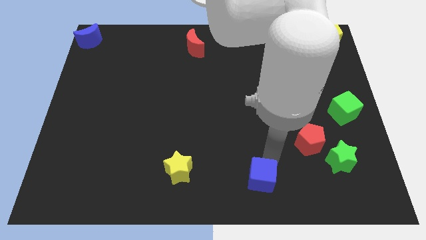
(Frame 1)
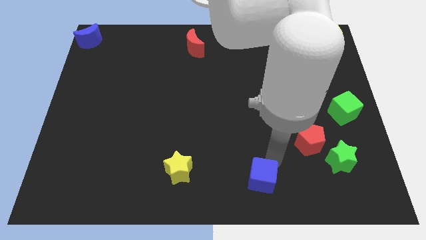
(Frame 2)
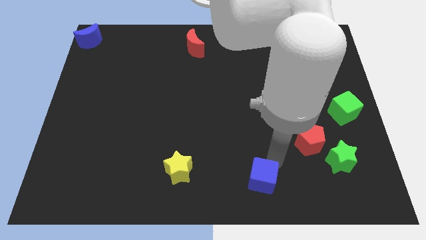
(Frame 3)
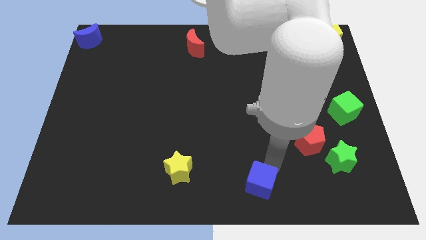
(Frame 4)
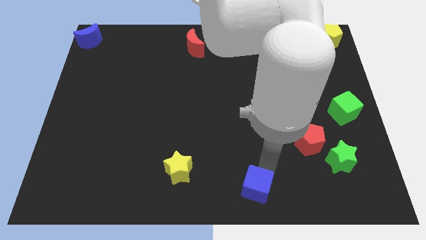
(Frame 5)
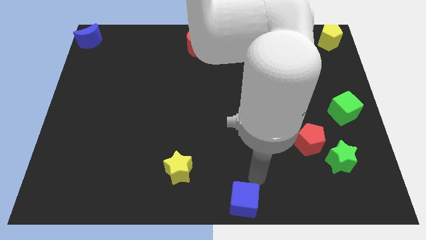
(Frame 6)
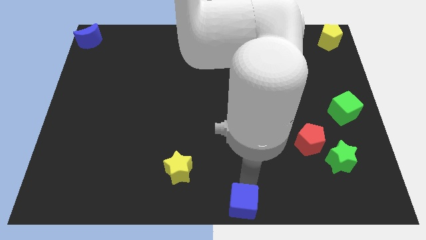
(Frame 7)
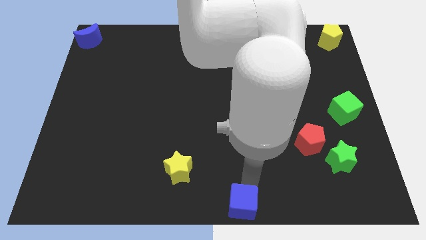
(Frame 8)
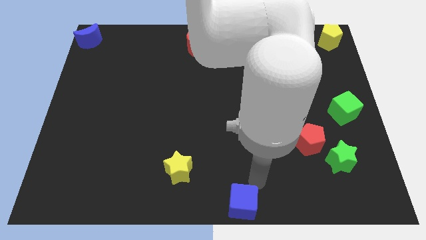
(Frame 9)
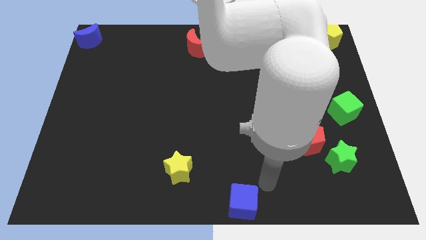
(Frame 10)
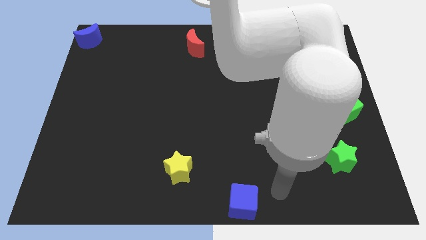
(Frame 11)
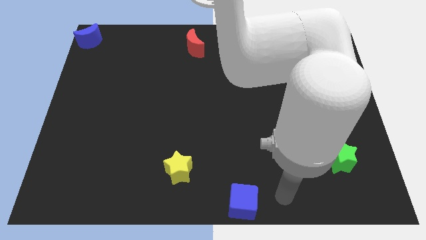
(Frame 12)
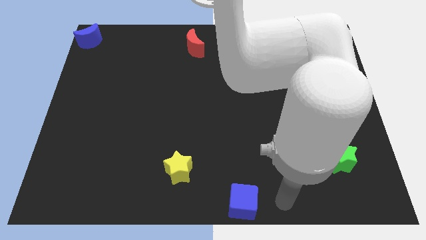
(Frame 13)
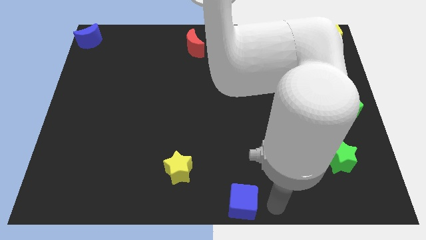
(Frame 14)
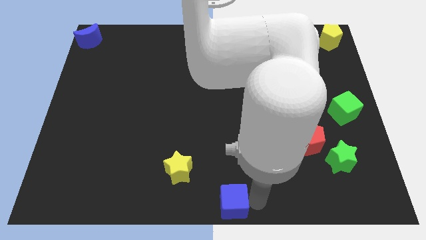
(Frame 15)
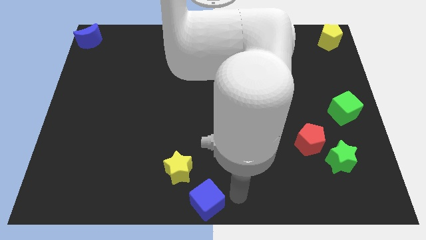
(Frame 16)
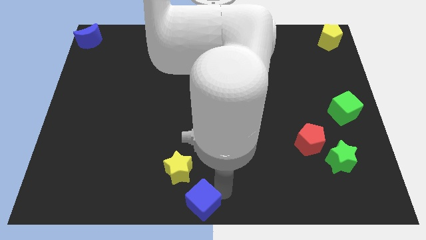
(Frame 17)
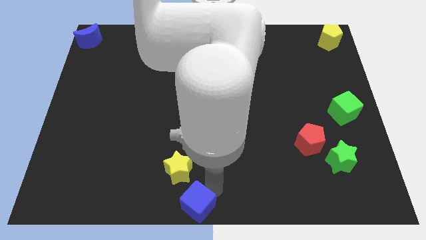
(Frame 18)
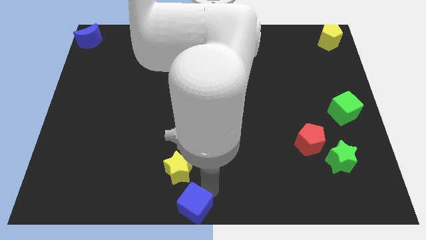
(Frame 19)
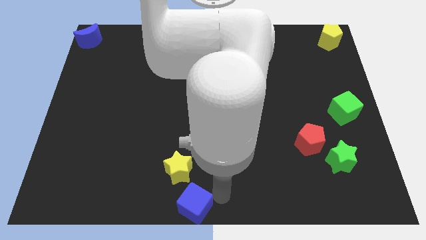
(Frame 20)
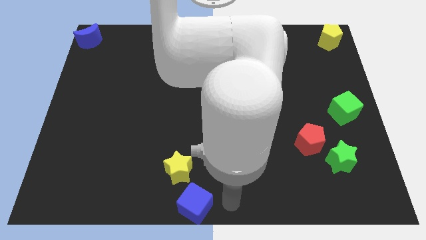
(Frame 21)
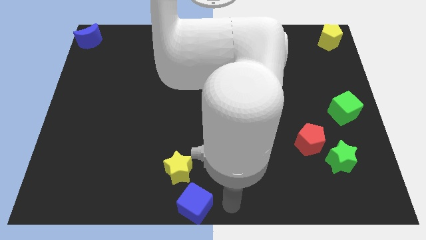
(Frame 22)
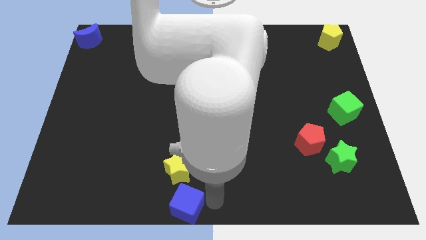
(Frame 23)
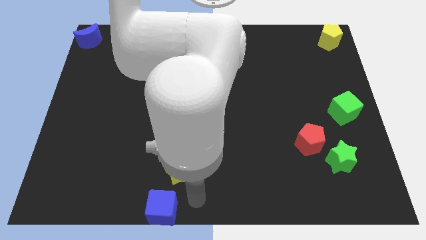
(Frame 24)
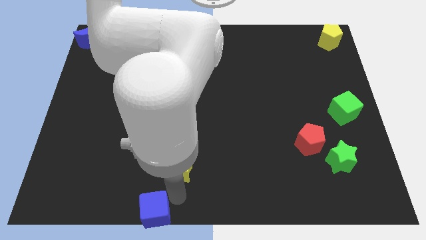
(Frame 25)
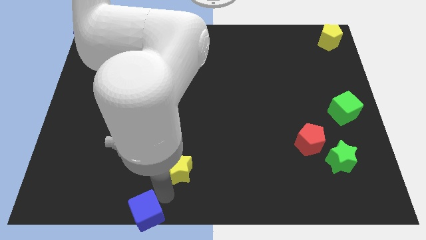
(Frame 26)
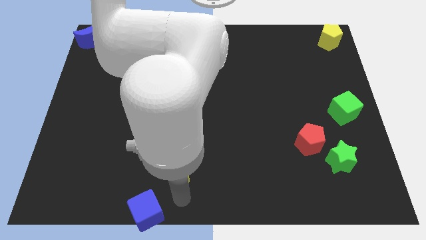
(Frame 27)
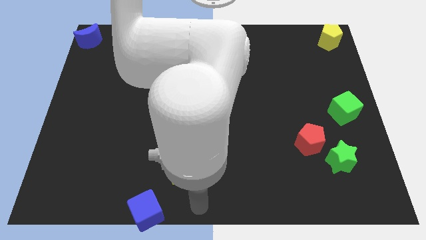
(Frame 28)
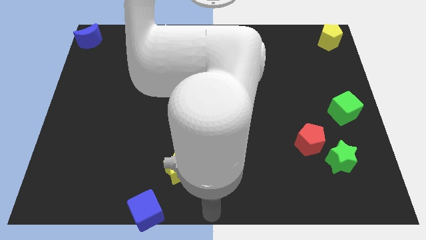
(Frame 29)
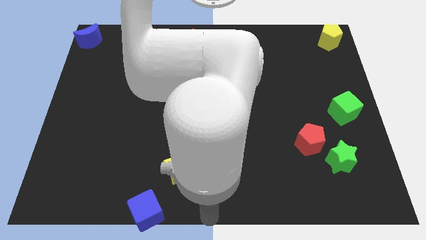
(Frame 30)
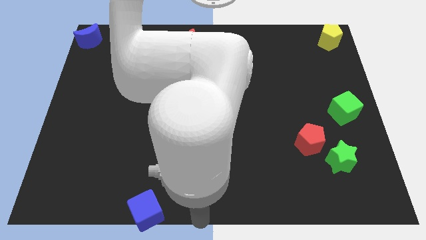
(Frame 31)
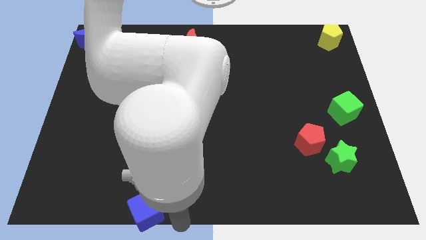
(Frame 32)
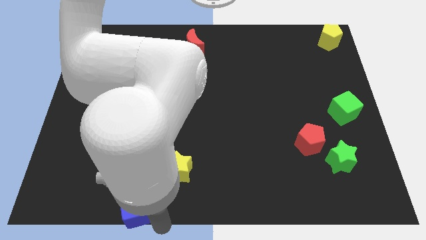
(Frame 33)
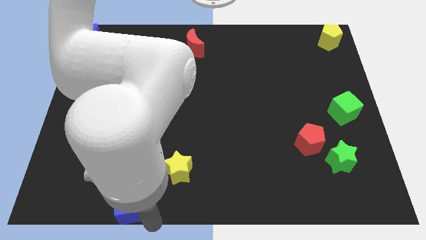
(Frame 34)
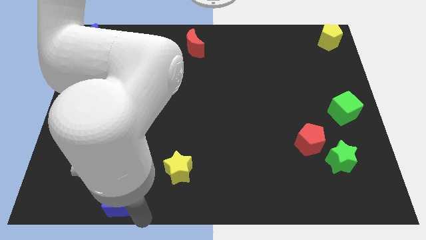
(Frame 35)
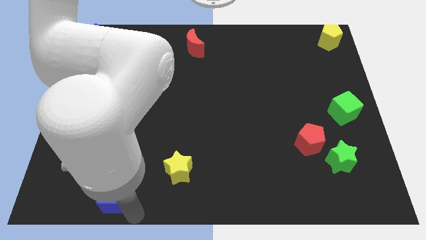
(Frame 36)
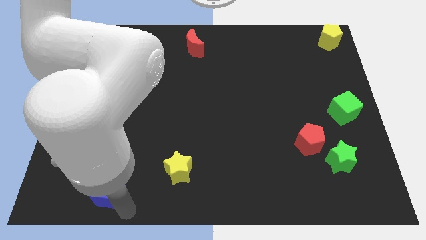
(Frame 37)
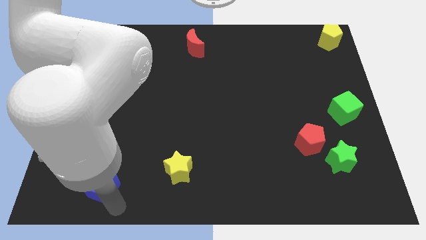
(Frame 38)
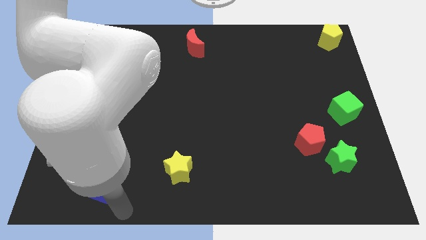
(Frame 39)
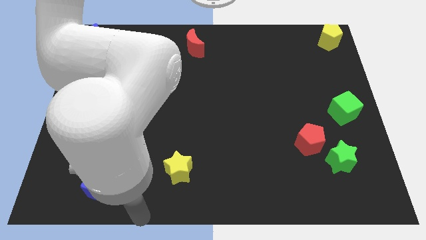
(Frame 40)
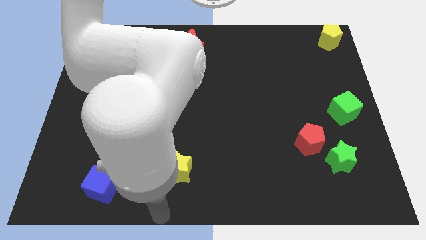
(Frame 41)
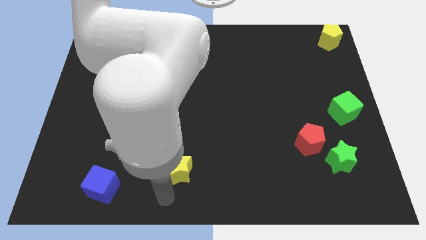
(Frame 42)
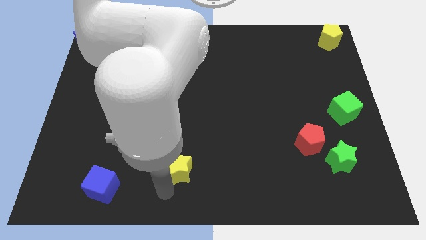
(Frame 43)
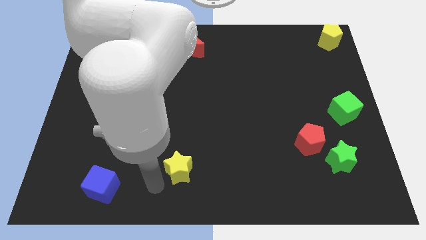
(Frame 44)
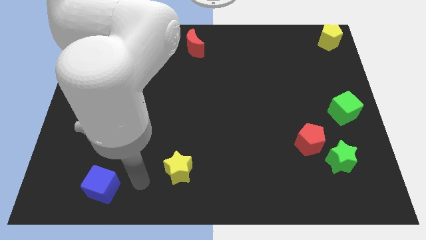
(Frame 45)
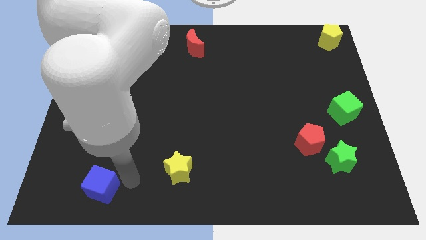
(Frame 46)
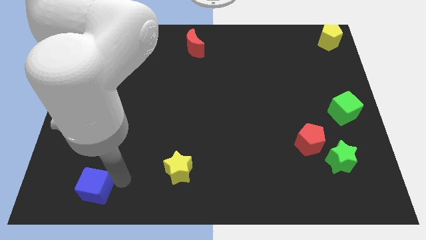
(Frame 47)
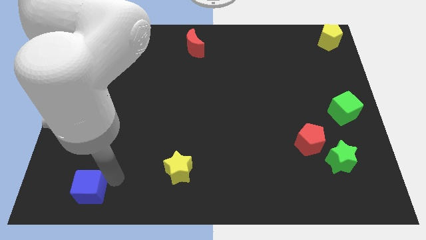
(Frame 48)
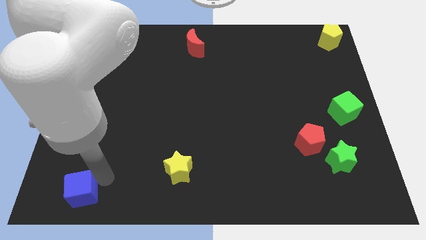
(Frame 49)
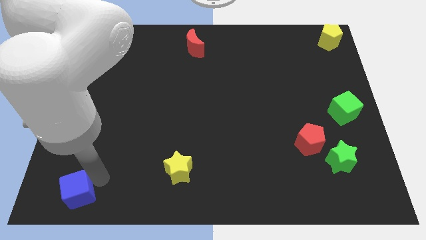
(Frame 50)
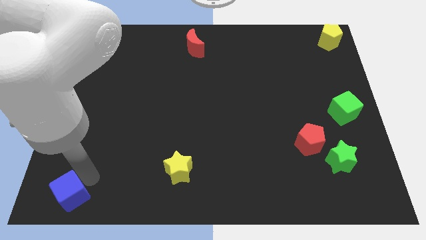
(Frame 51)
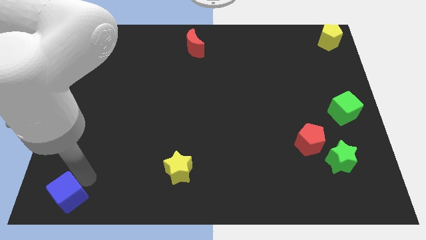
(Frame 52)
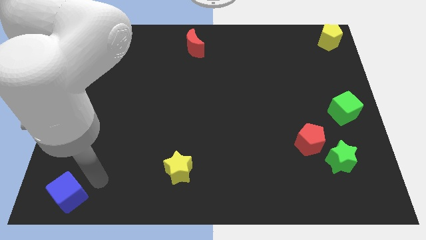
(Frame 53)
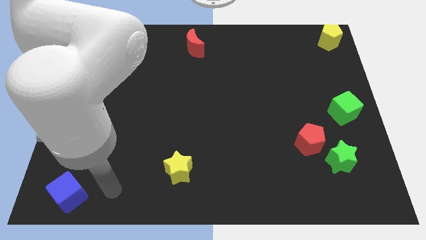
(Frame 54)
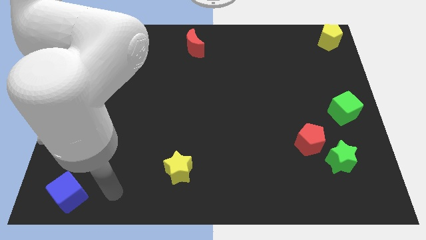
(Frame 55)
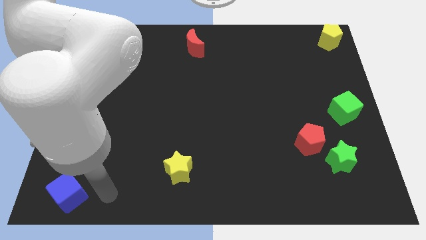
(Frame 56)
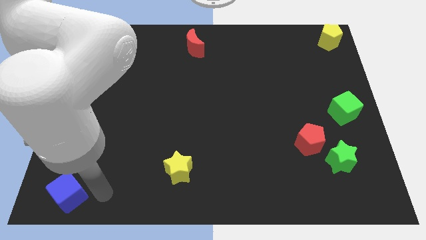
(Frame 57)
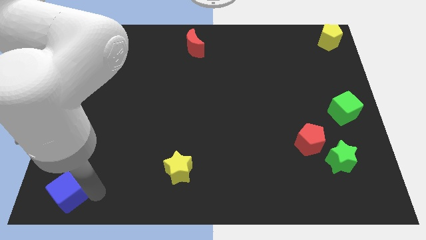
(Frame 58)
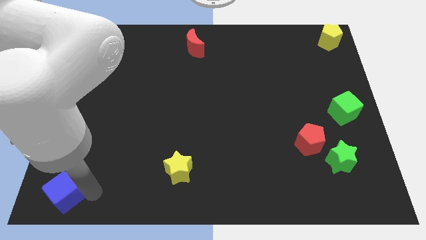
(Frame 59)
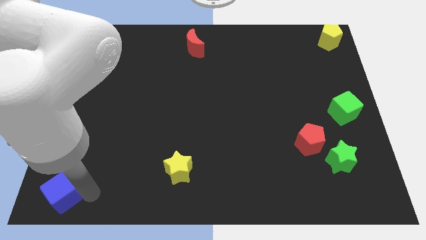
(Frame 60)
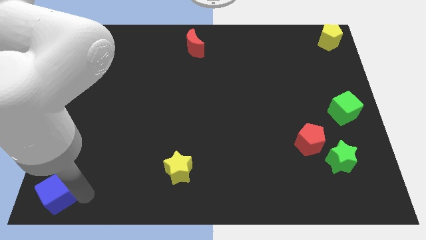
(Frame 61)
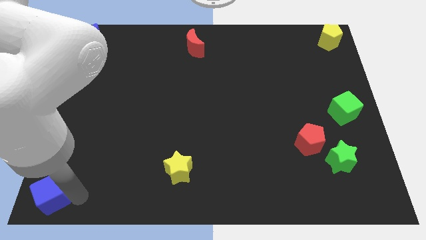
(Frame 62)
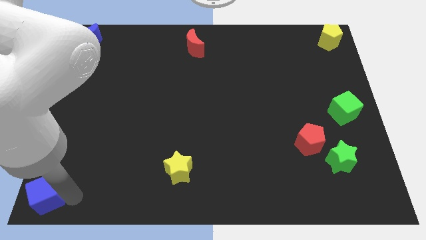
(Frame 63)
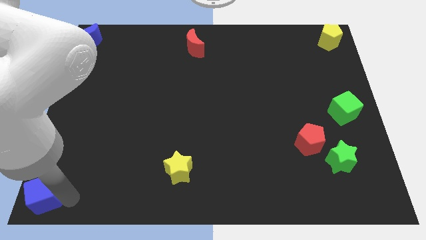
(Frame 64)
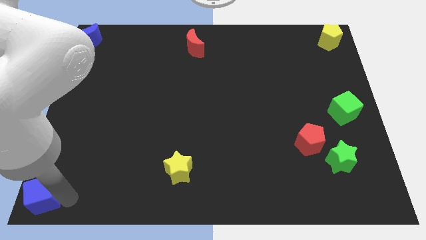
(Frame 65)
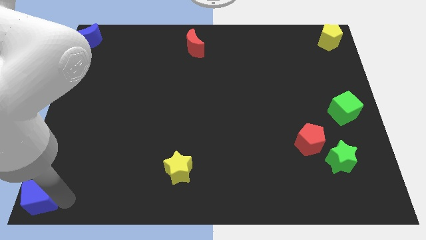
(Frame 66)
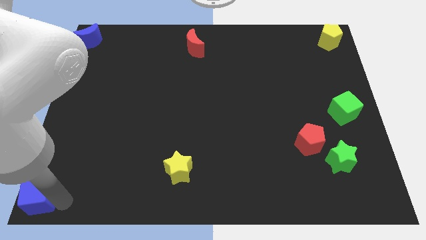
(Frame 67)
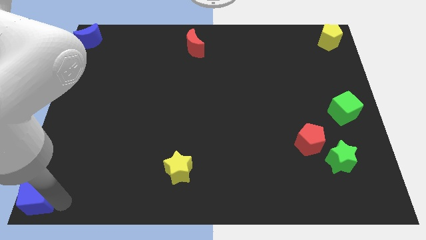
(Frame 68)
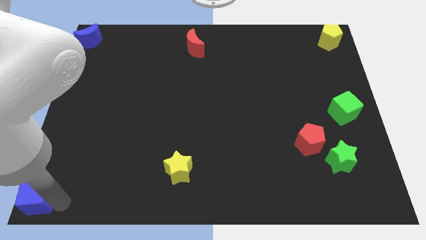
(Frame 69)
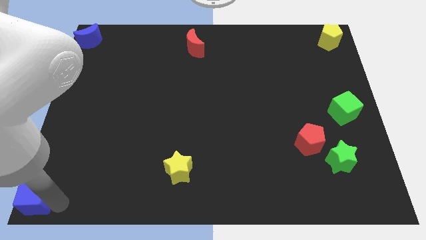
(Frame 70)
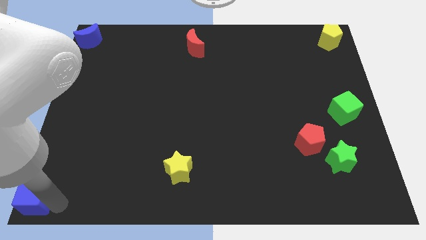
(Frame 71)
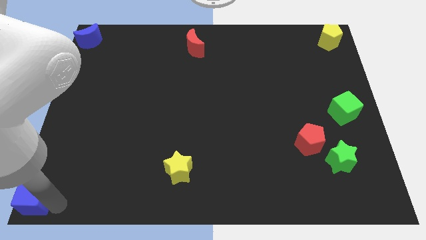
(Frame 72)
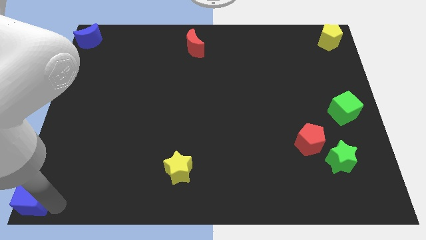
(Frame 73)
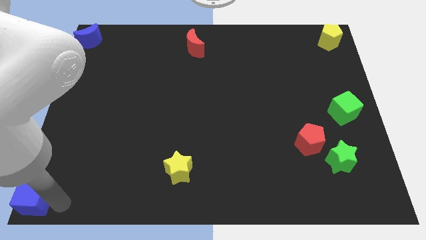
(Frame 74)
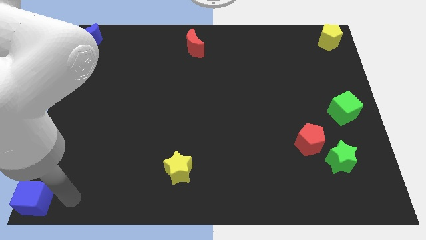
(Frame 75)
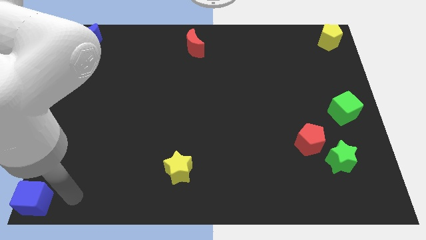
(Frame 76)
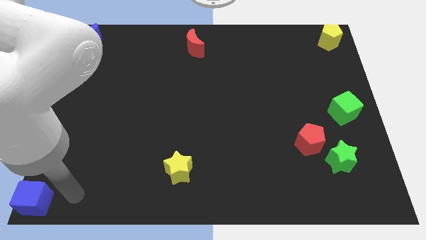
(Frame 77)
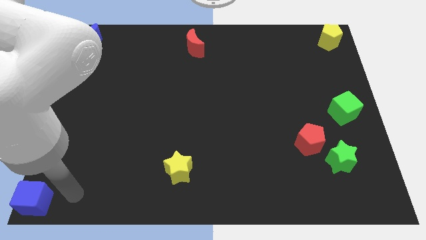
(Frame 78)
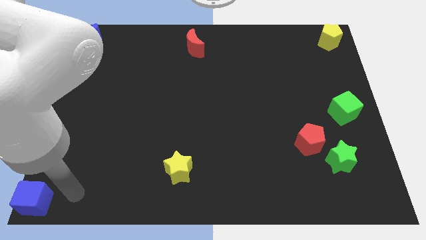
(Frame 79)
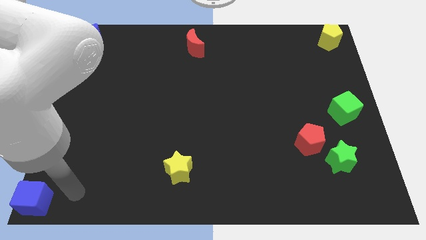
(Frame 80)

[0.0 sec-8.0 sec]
push the blue cube to the bottom left corner of the board

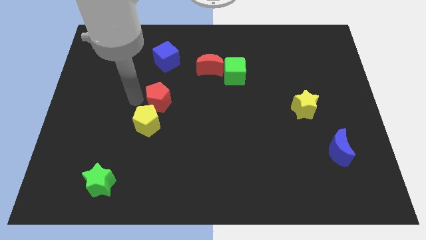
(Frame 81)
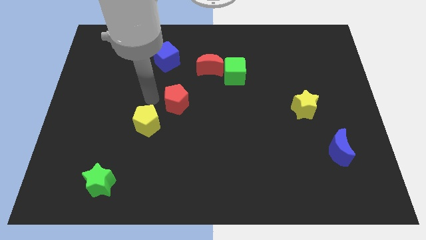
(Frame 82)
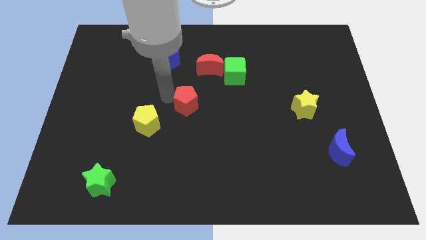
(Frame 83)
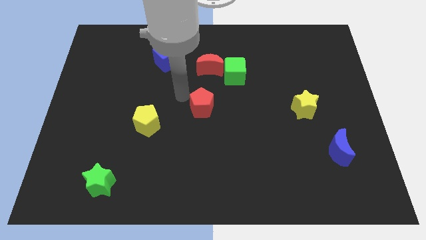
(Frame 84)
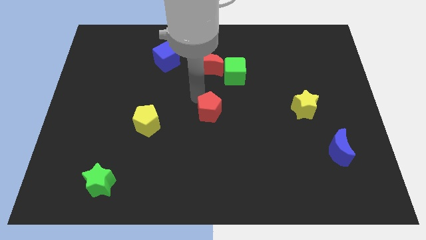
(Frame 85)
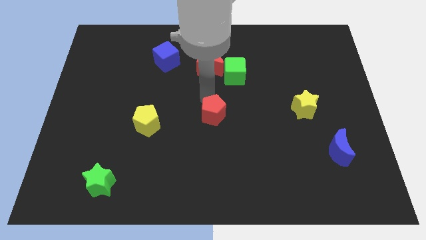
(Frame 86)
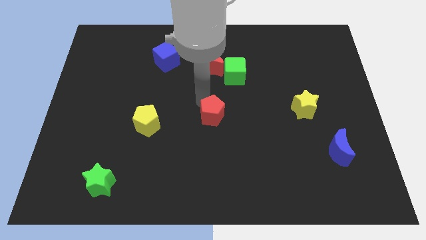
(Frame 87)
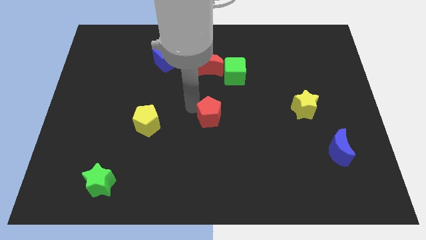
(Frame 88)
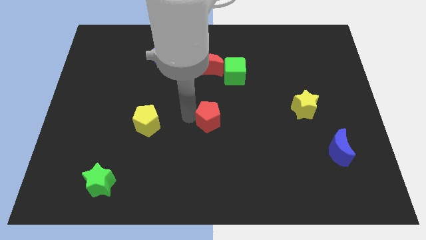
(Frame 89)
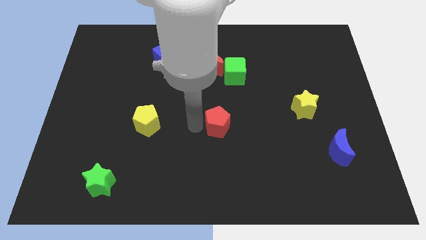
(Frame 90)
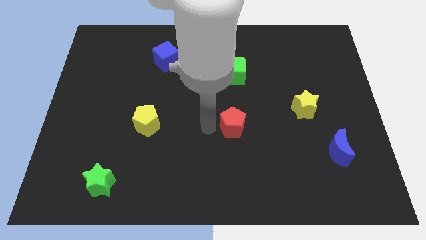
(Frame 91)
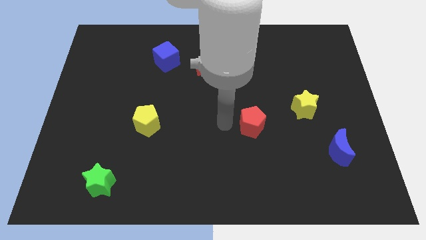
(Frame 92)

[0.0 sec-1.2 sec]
move red pentagon parallel to the yellow pentagon
